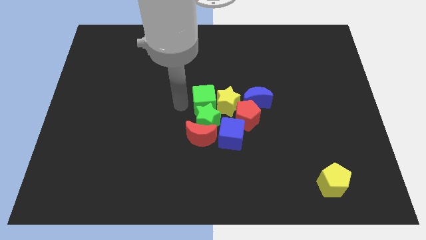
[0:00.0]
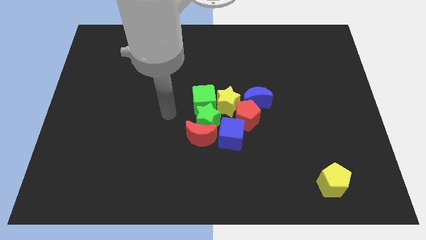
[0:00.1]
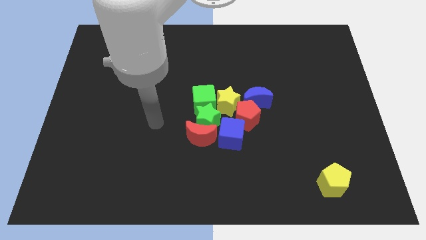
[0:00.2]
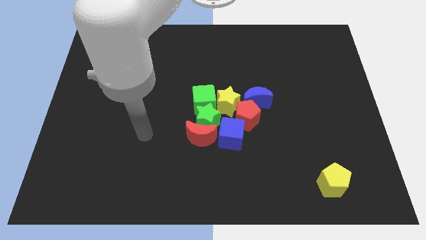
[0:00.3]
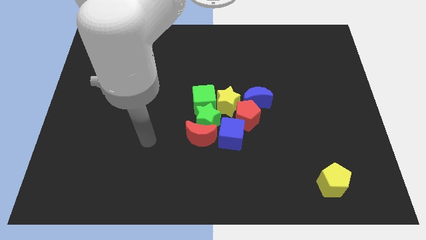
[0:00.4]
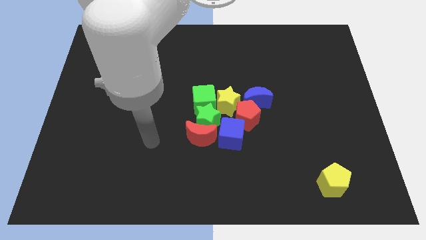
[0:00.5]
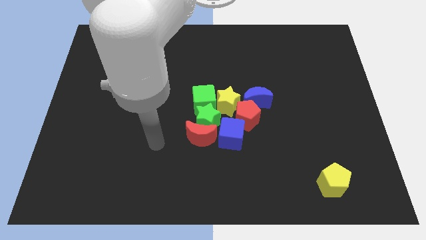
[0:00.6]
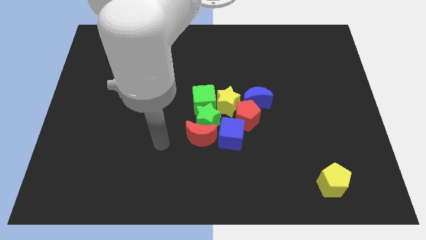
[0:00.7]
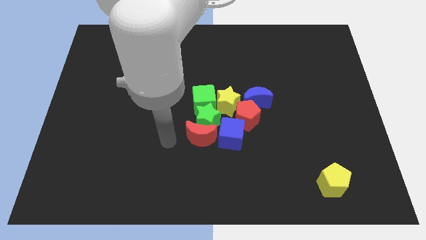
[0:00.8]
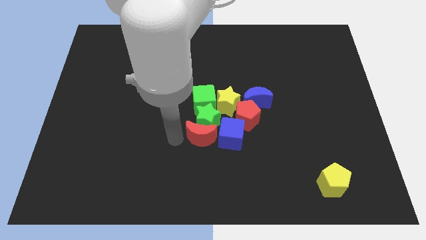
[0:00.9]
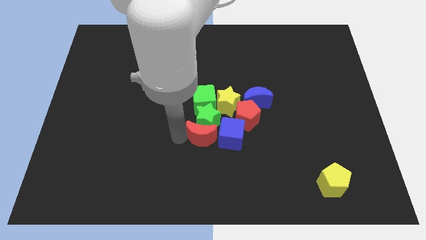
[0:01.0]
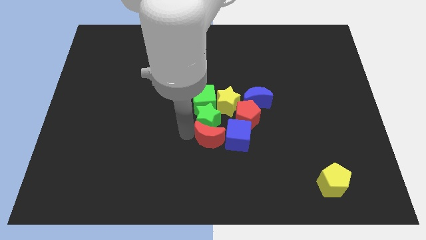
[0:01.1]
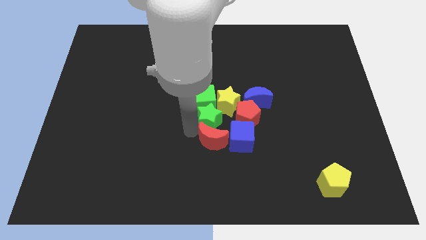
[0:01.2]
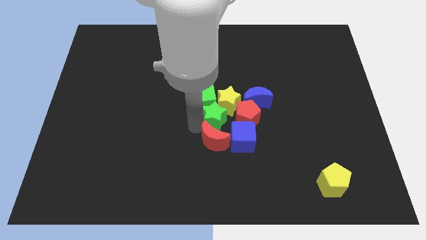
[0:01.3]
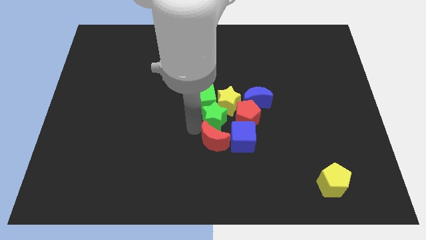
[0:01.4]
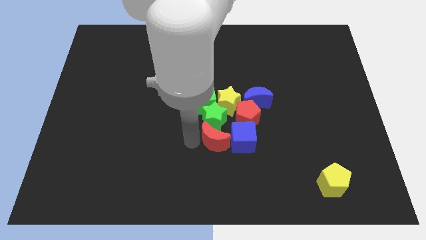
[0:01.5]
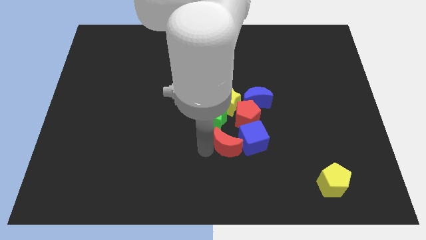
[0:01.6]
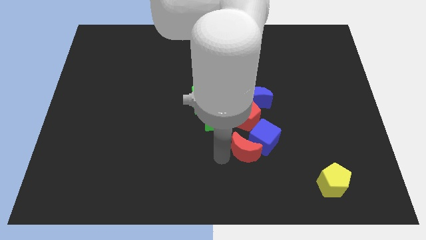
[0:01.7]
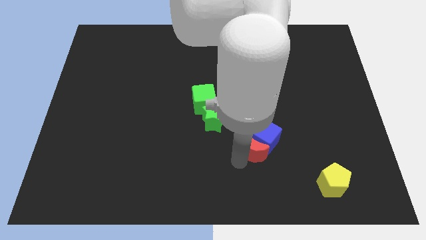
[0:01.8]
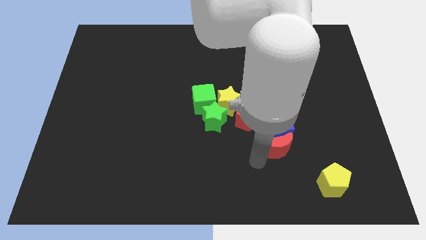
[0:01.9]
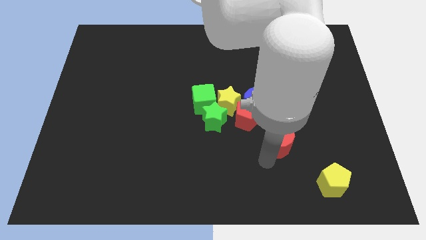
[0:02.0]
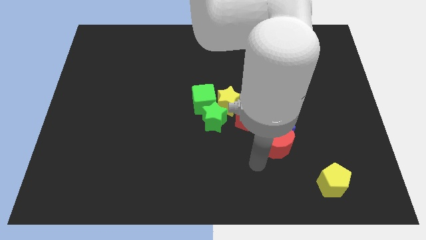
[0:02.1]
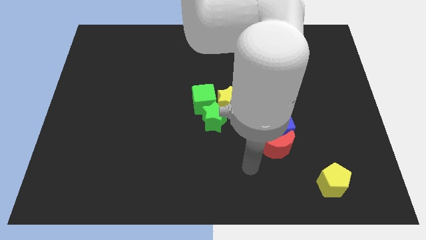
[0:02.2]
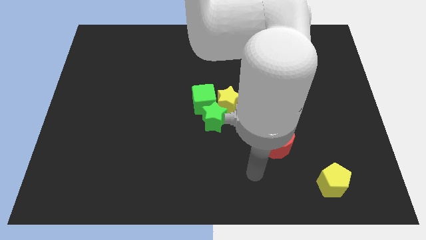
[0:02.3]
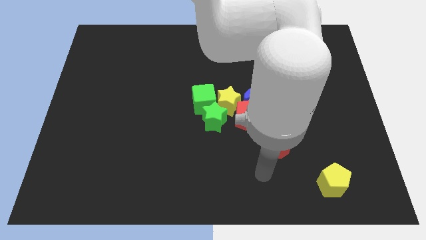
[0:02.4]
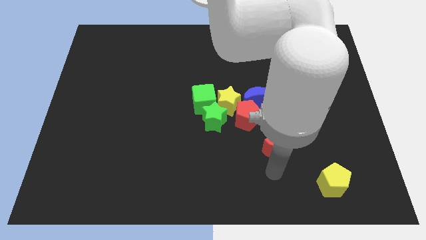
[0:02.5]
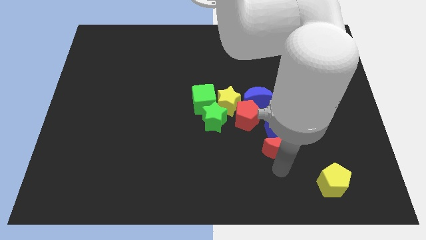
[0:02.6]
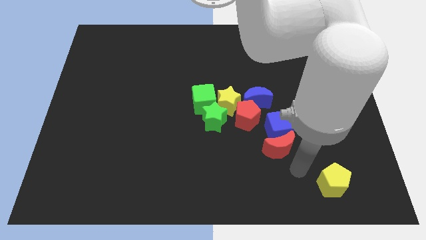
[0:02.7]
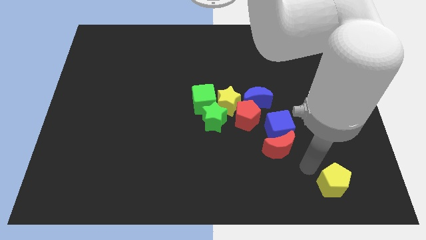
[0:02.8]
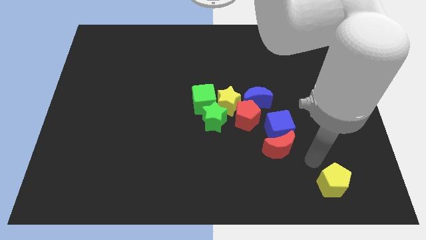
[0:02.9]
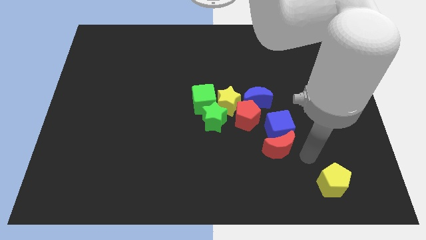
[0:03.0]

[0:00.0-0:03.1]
push the red crescent to the bottom of the blue cube

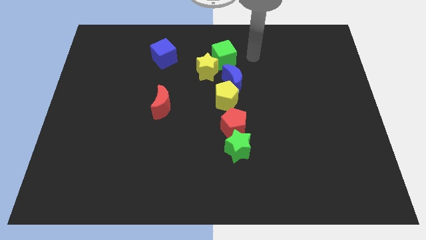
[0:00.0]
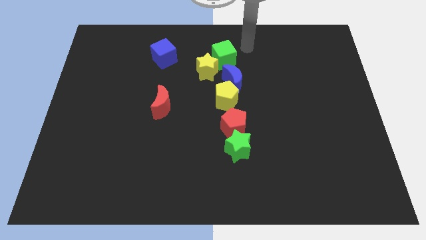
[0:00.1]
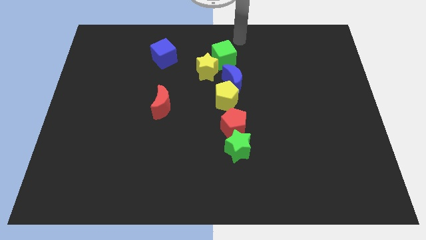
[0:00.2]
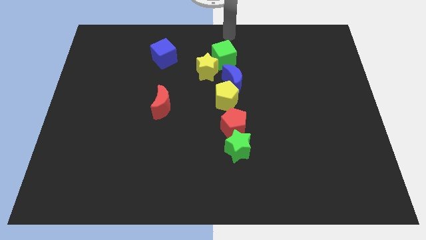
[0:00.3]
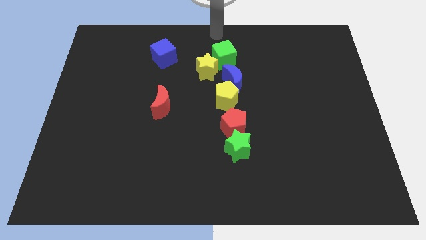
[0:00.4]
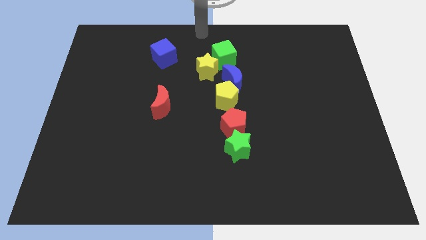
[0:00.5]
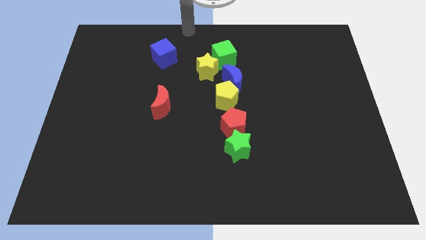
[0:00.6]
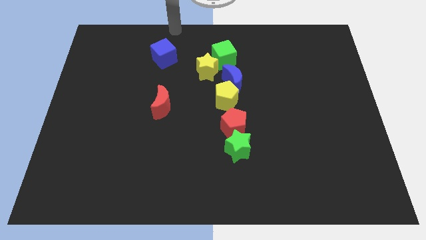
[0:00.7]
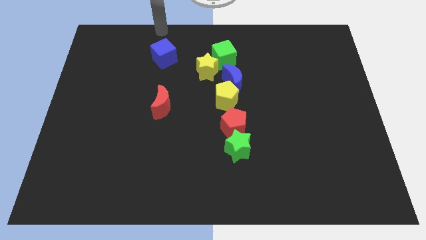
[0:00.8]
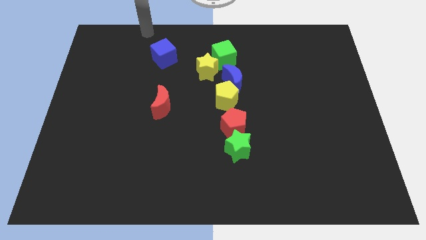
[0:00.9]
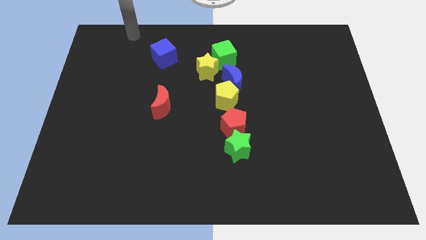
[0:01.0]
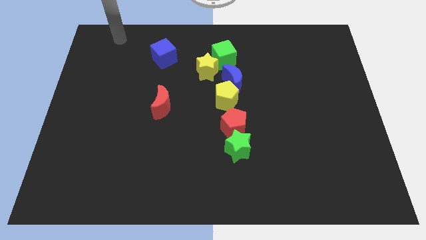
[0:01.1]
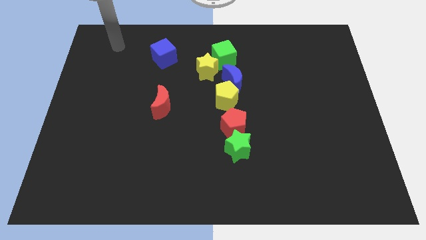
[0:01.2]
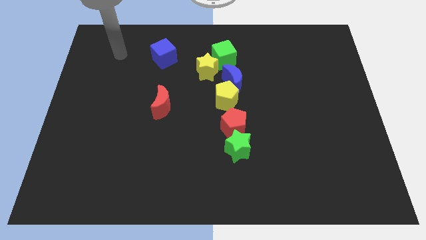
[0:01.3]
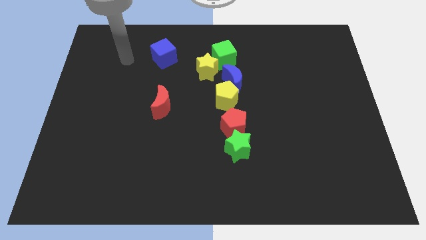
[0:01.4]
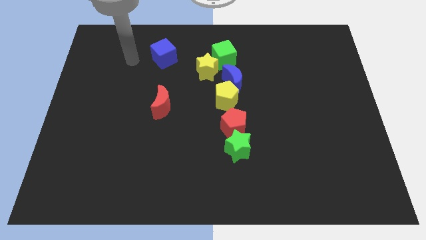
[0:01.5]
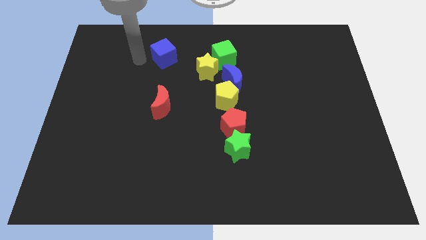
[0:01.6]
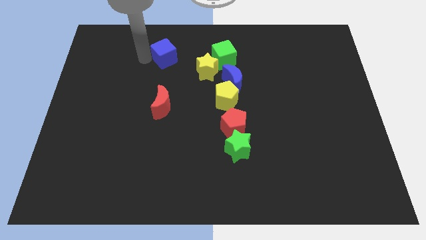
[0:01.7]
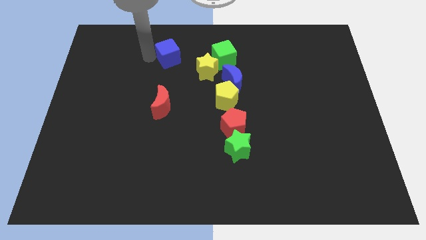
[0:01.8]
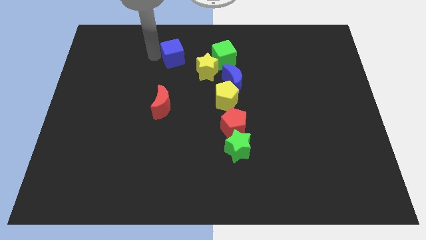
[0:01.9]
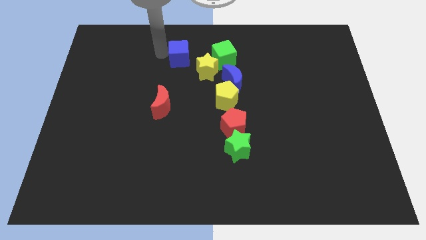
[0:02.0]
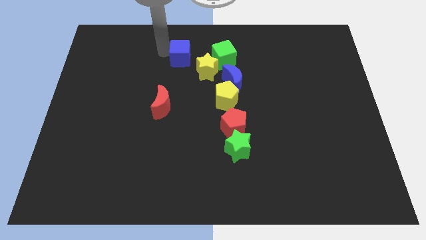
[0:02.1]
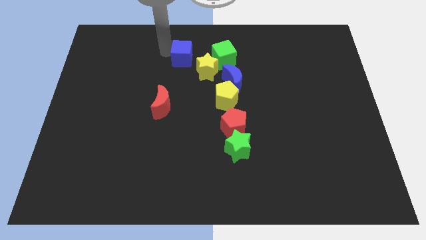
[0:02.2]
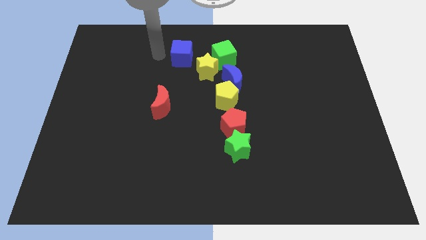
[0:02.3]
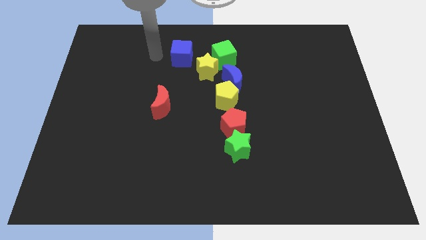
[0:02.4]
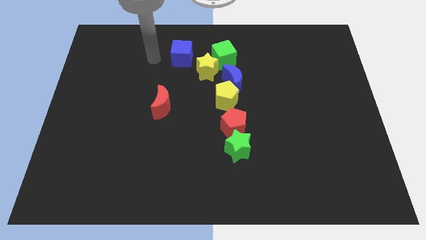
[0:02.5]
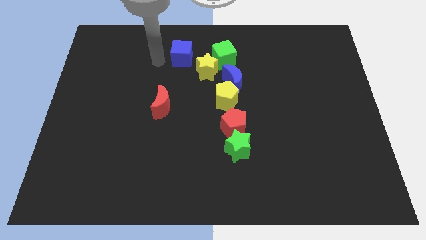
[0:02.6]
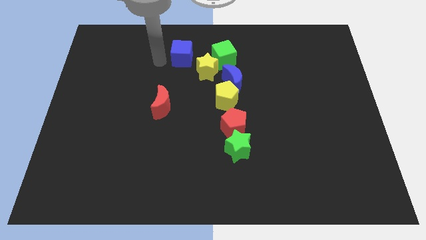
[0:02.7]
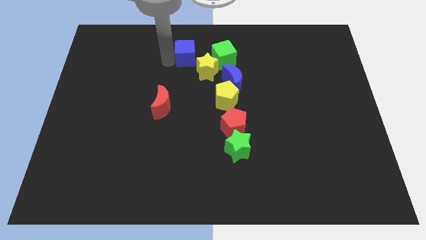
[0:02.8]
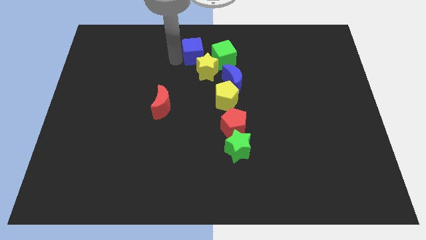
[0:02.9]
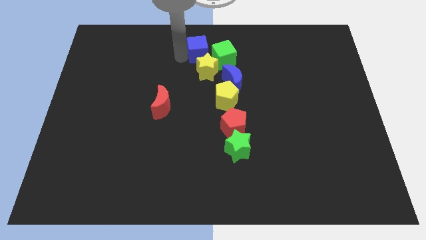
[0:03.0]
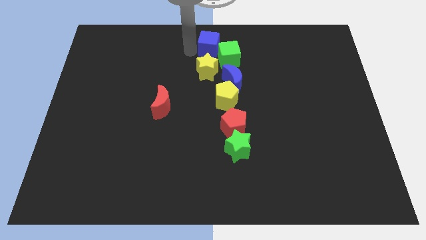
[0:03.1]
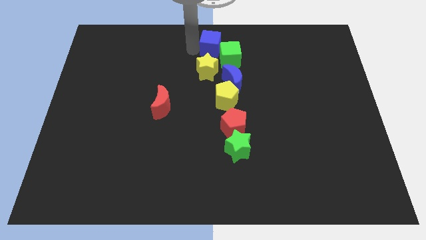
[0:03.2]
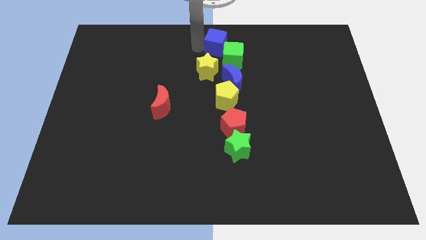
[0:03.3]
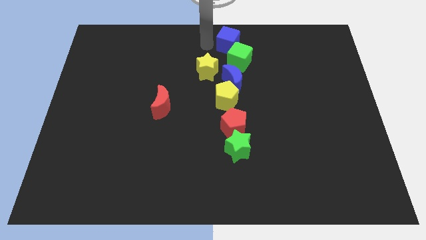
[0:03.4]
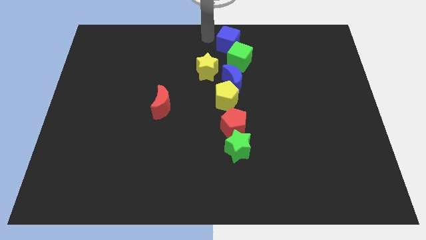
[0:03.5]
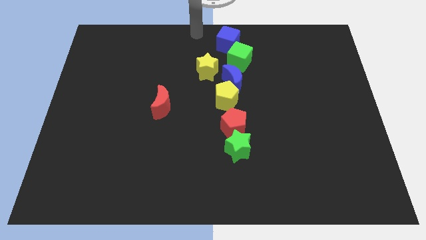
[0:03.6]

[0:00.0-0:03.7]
move the blue cube into the green cube

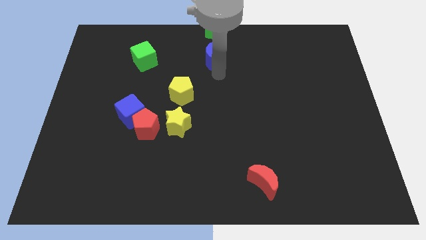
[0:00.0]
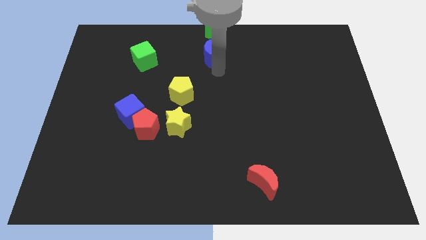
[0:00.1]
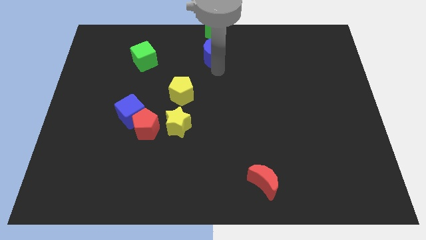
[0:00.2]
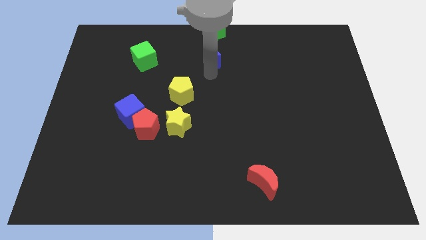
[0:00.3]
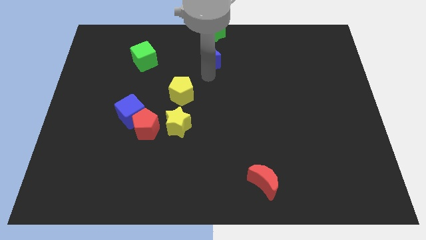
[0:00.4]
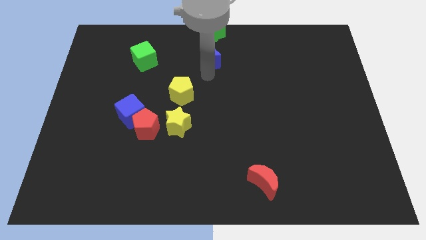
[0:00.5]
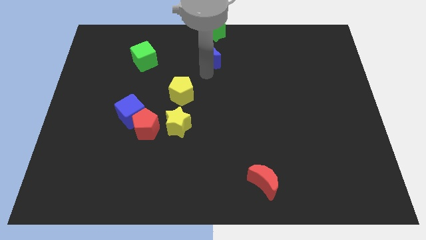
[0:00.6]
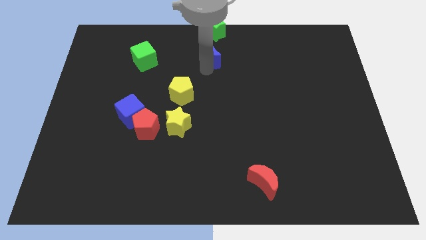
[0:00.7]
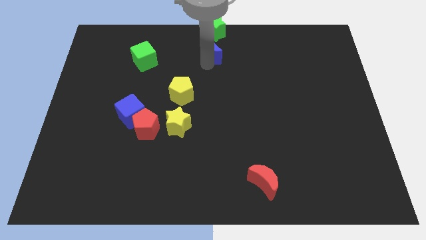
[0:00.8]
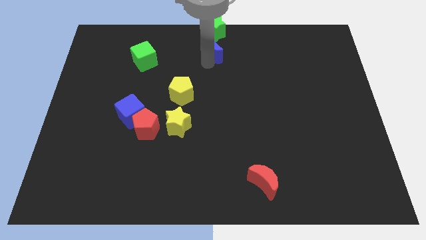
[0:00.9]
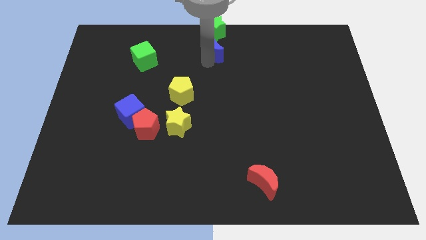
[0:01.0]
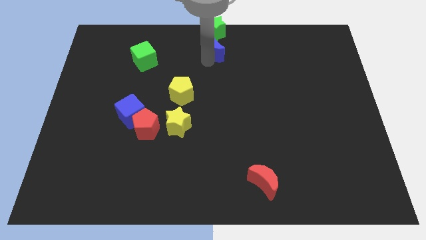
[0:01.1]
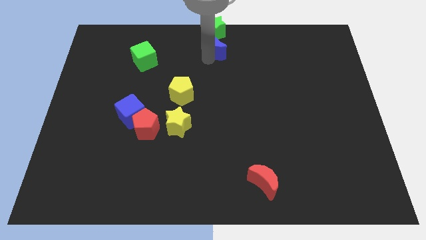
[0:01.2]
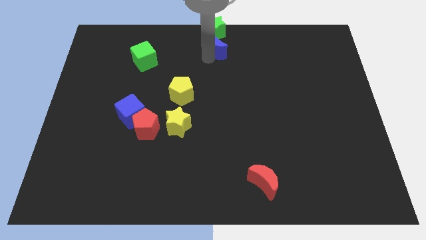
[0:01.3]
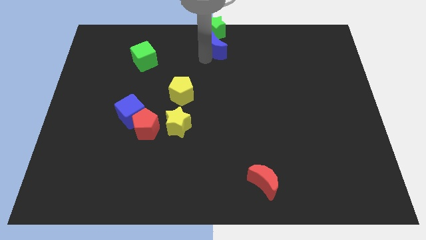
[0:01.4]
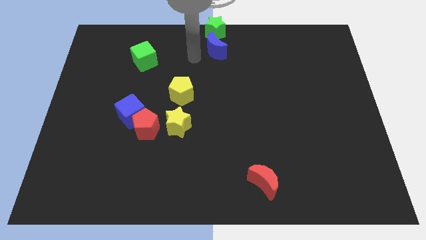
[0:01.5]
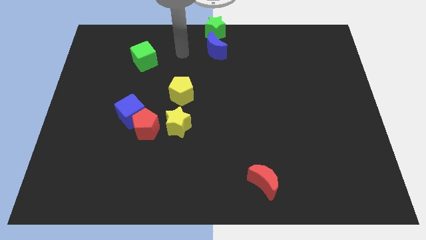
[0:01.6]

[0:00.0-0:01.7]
push the blue moon into the green star

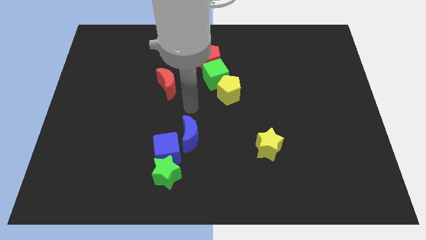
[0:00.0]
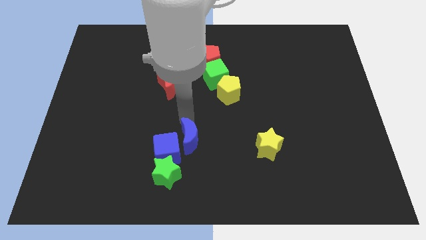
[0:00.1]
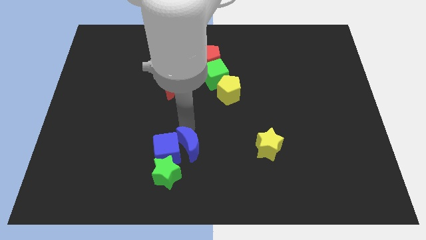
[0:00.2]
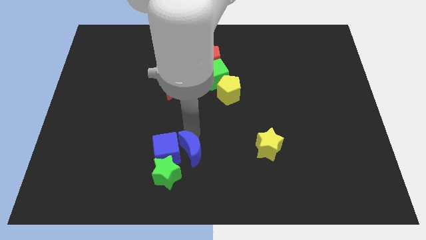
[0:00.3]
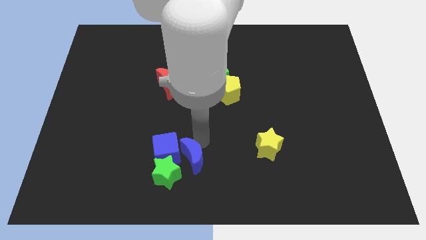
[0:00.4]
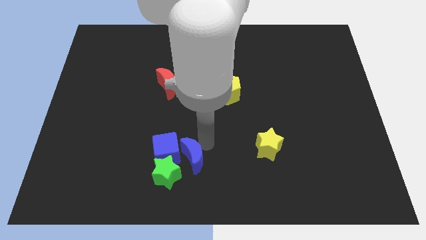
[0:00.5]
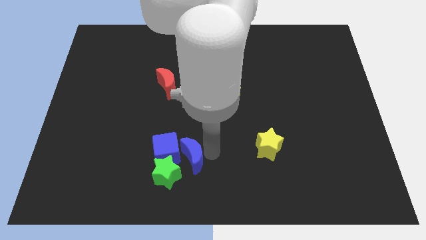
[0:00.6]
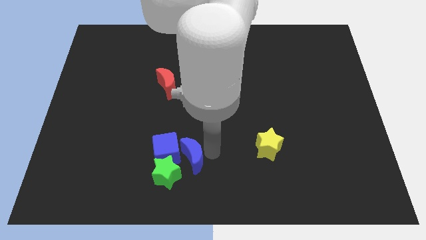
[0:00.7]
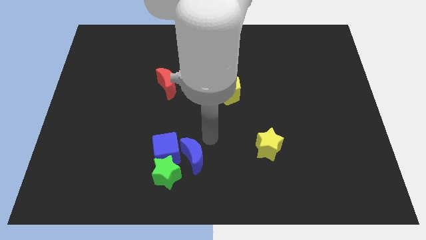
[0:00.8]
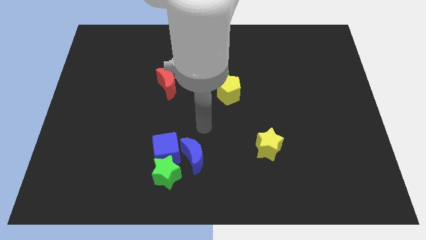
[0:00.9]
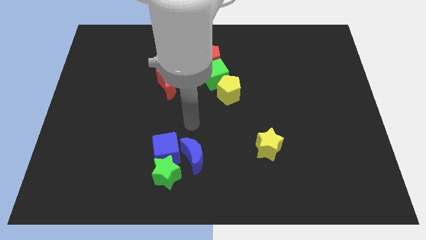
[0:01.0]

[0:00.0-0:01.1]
push the blue crescent slightly to the bottom
